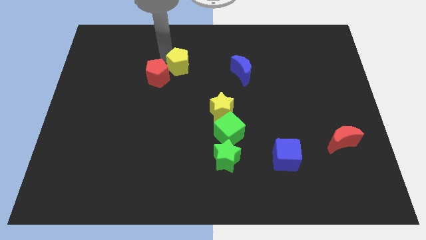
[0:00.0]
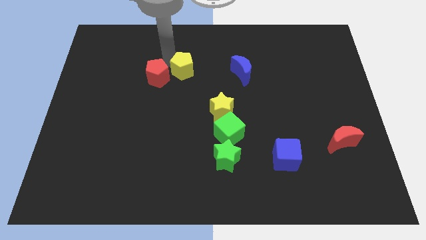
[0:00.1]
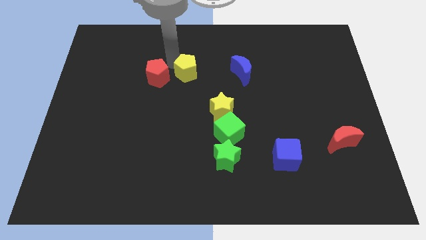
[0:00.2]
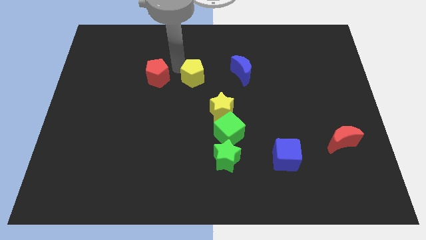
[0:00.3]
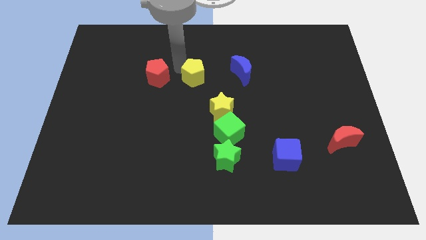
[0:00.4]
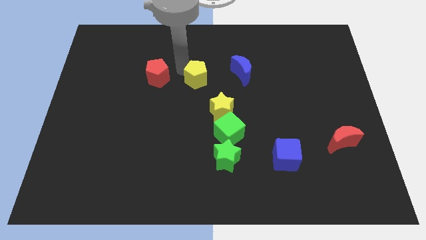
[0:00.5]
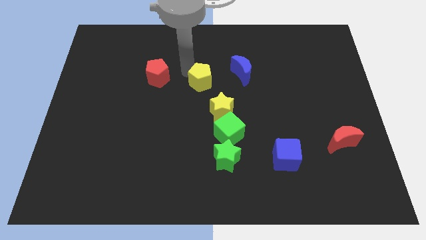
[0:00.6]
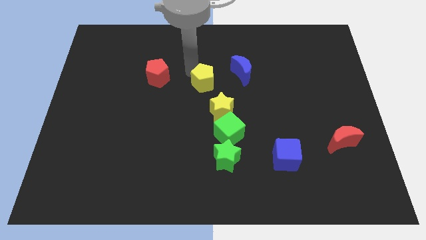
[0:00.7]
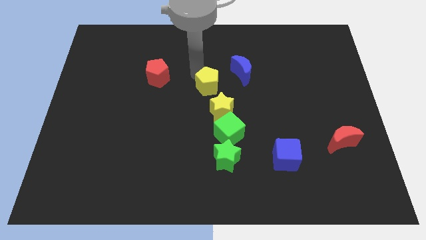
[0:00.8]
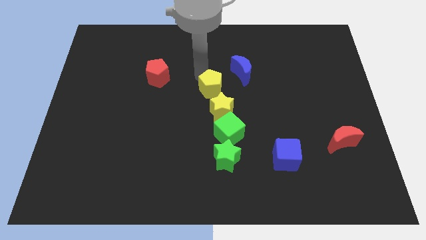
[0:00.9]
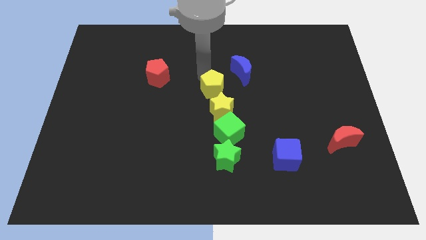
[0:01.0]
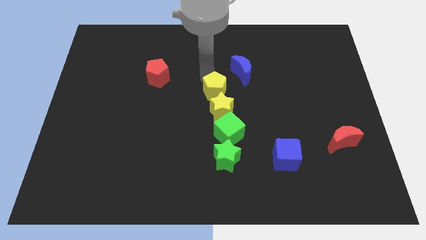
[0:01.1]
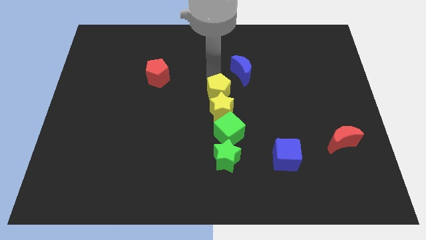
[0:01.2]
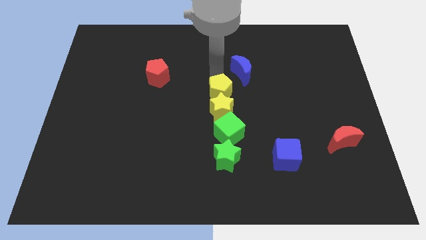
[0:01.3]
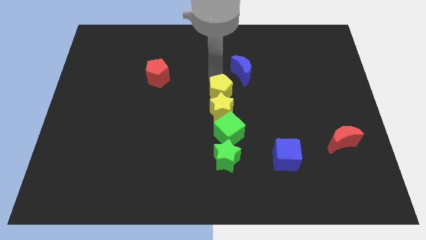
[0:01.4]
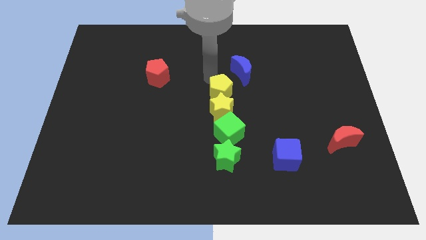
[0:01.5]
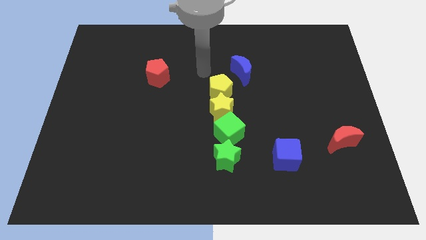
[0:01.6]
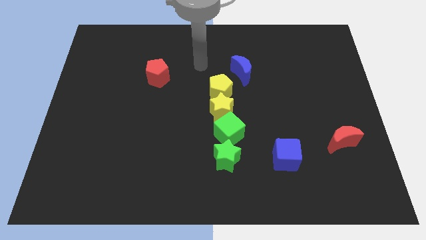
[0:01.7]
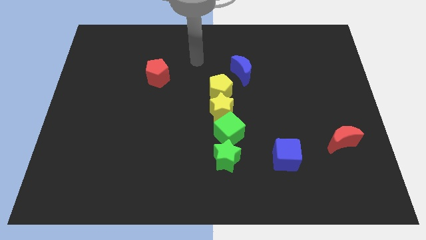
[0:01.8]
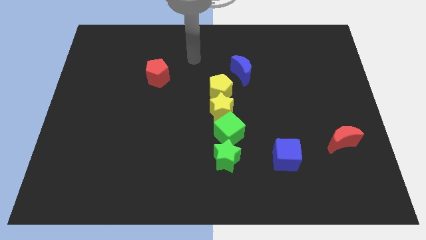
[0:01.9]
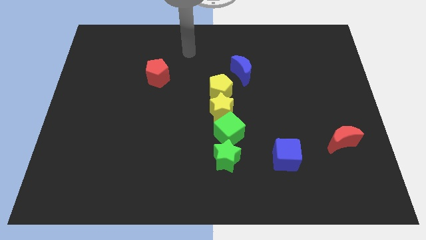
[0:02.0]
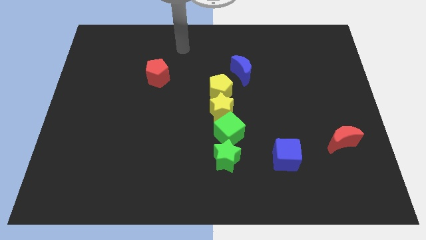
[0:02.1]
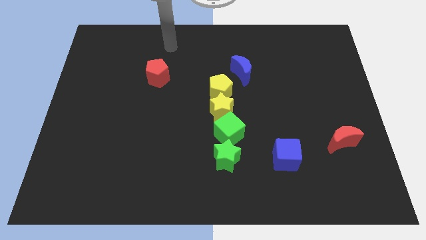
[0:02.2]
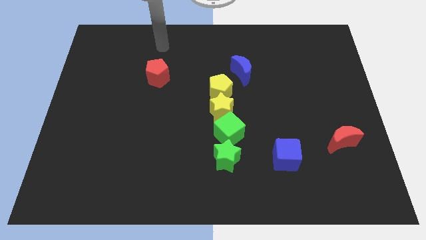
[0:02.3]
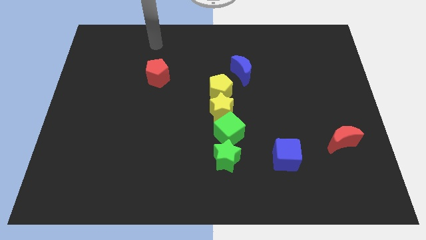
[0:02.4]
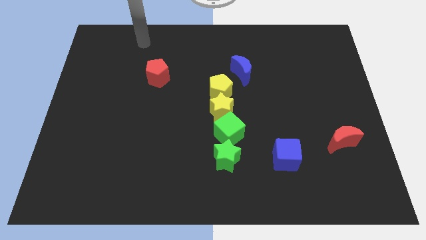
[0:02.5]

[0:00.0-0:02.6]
place the yellow pentagon towards the yellow star

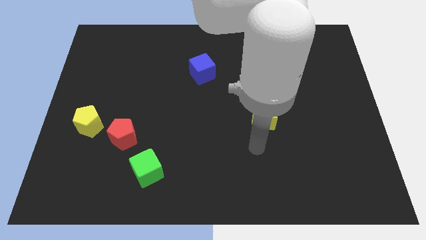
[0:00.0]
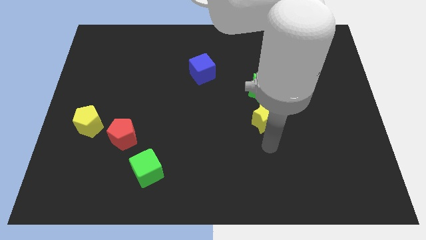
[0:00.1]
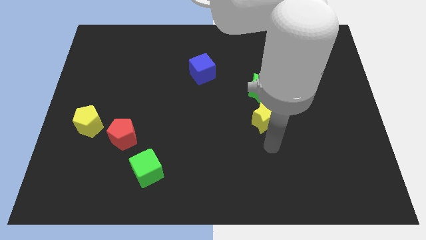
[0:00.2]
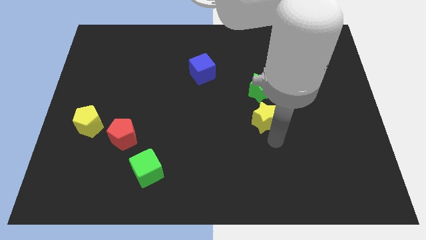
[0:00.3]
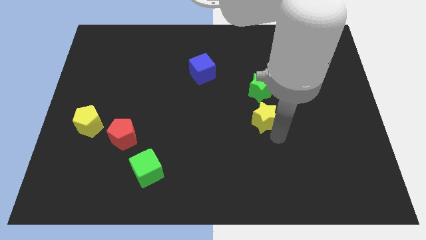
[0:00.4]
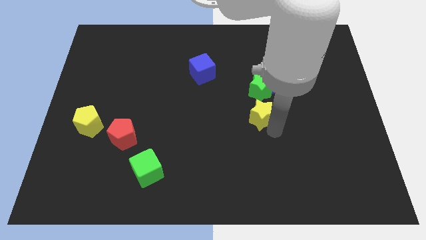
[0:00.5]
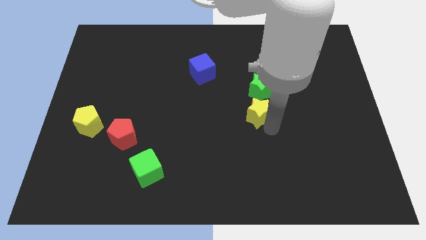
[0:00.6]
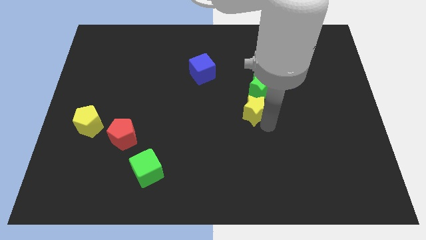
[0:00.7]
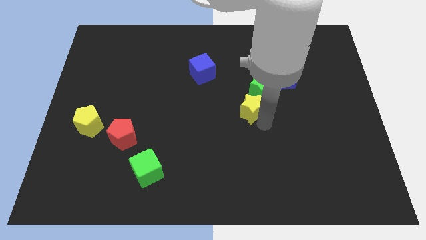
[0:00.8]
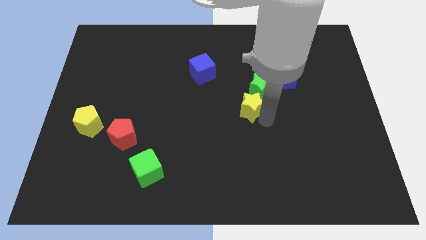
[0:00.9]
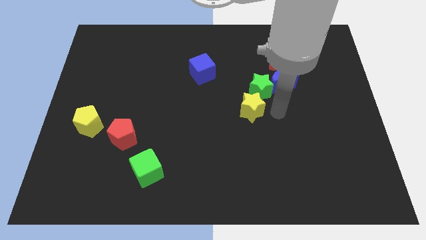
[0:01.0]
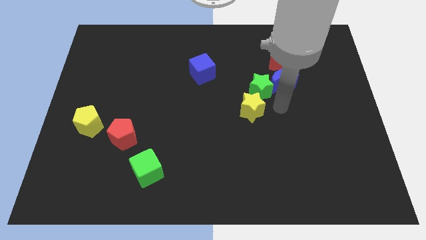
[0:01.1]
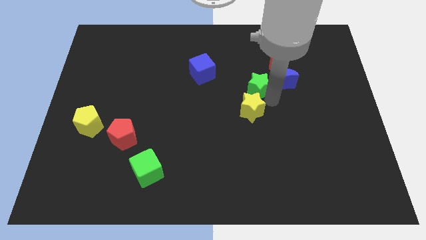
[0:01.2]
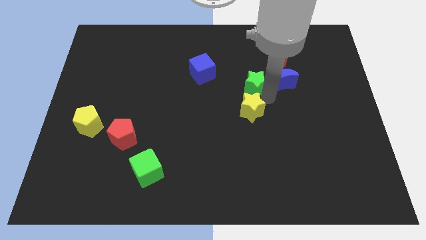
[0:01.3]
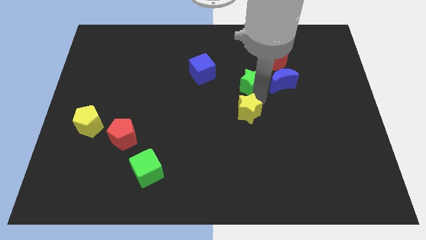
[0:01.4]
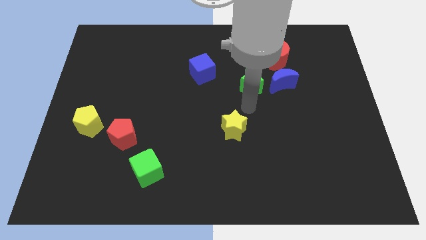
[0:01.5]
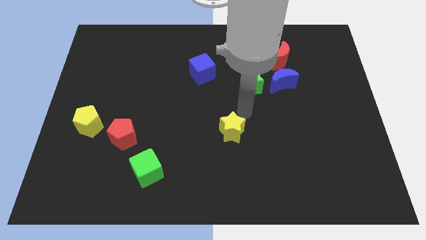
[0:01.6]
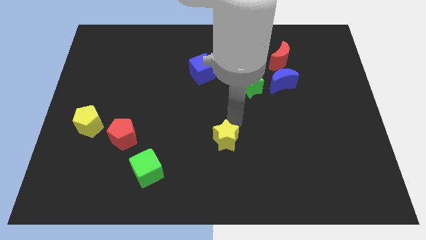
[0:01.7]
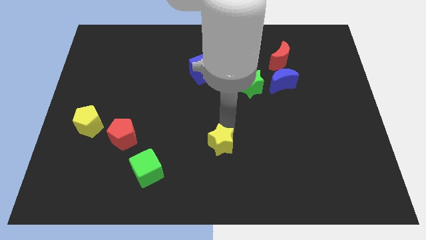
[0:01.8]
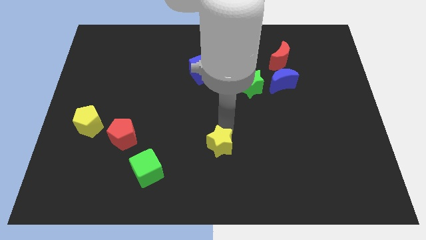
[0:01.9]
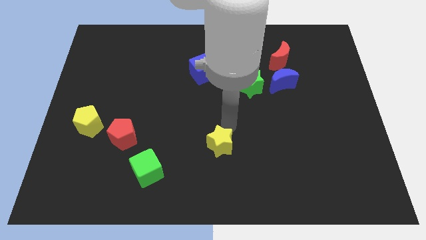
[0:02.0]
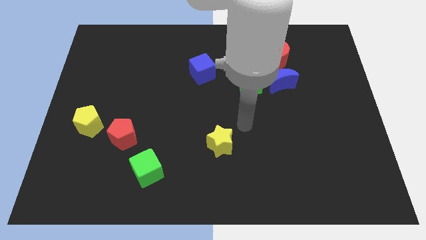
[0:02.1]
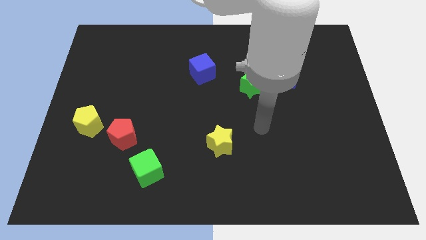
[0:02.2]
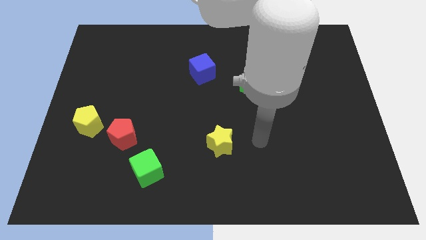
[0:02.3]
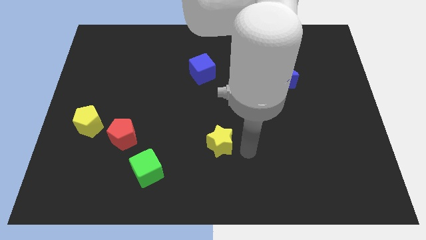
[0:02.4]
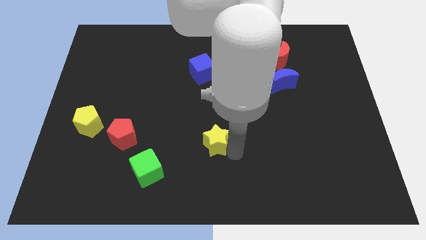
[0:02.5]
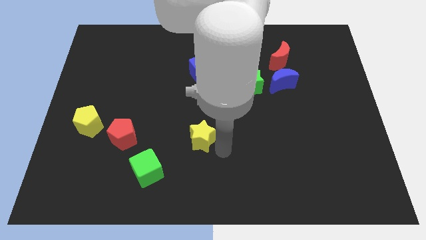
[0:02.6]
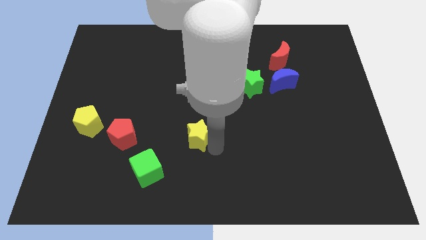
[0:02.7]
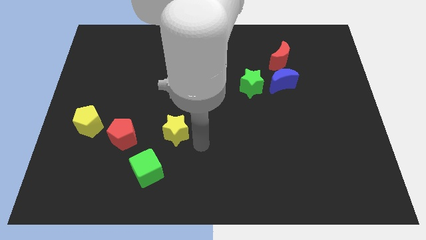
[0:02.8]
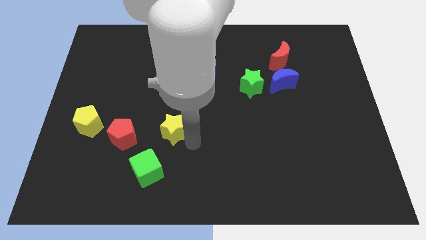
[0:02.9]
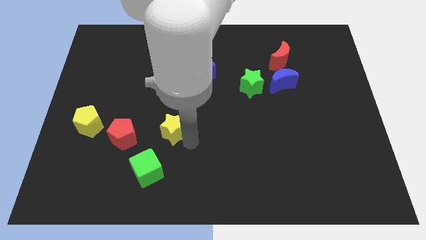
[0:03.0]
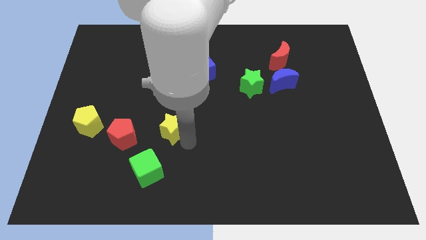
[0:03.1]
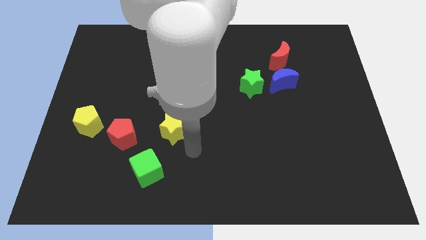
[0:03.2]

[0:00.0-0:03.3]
push the yellow star to the parallel right of red pentagon

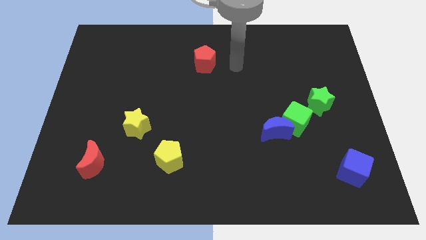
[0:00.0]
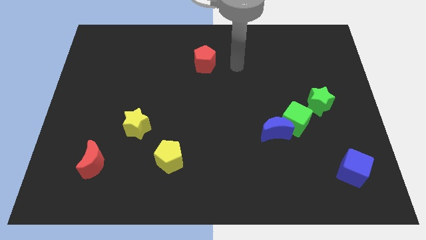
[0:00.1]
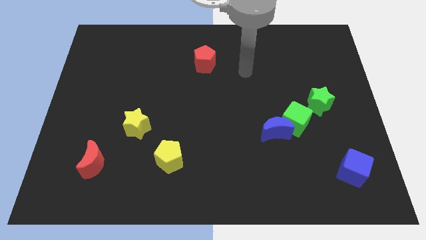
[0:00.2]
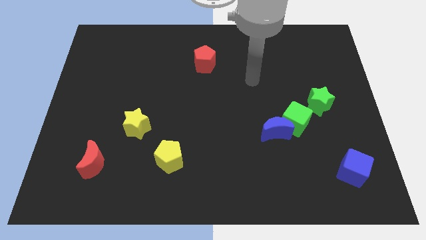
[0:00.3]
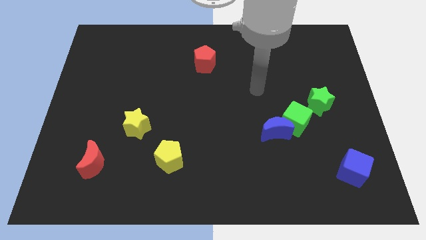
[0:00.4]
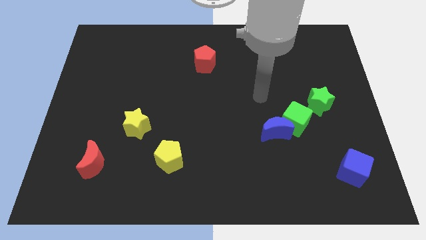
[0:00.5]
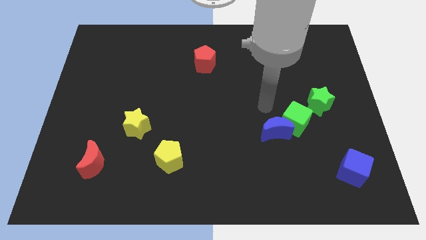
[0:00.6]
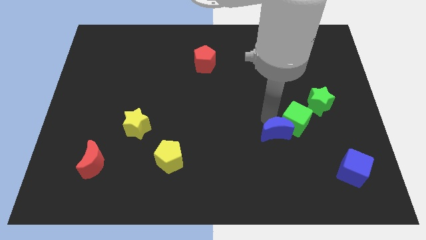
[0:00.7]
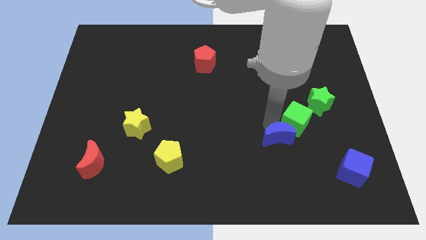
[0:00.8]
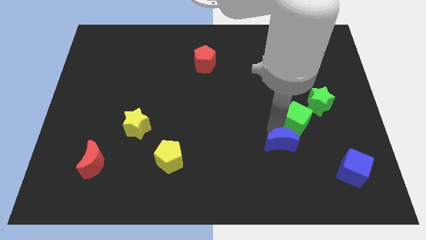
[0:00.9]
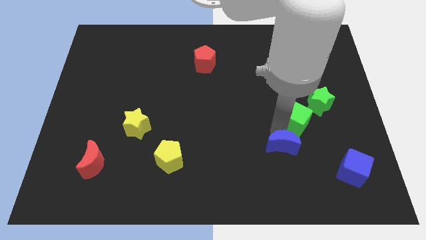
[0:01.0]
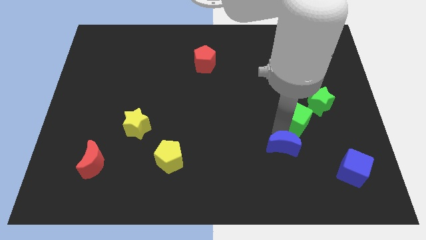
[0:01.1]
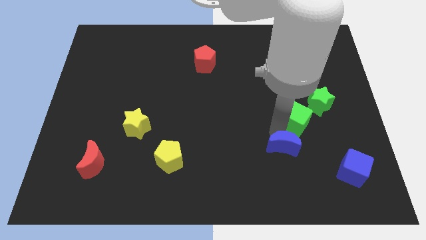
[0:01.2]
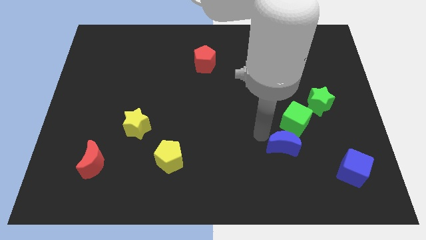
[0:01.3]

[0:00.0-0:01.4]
place the blue crescent below the green cube

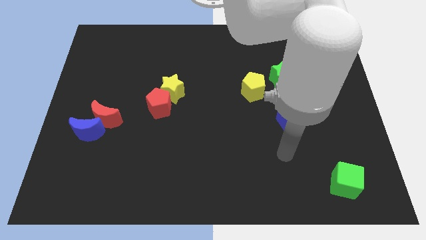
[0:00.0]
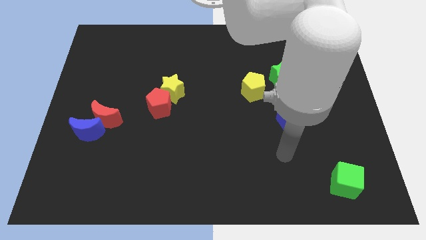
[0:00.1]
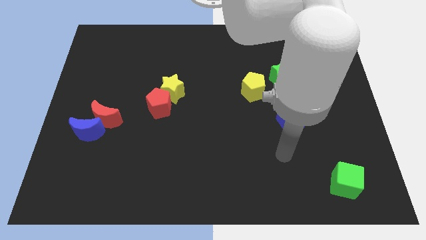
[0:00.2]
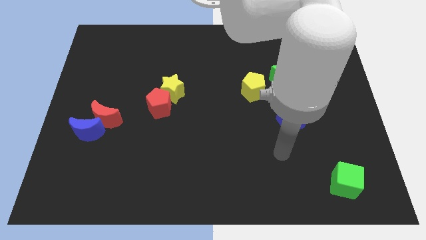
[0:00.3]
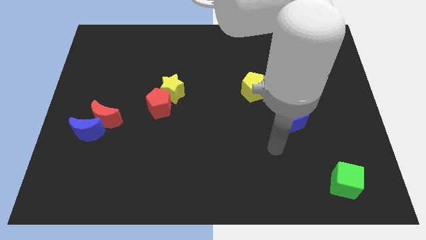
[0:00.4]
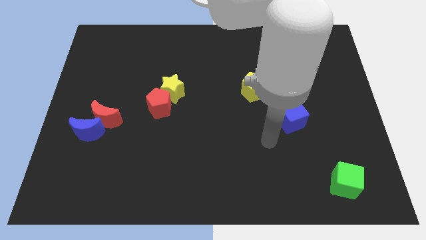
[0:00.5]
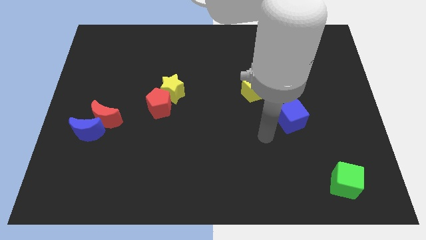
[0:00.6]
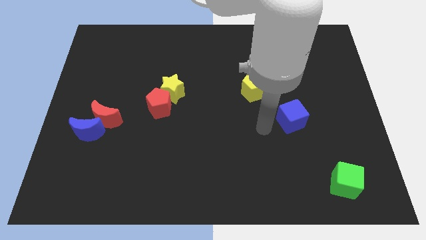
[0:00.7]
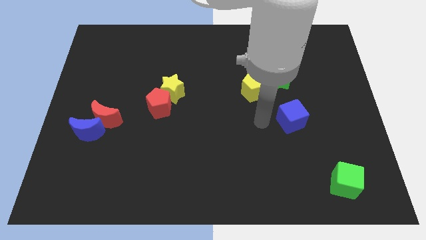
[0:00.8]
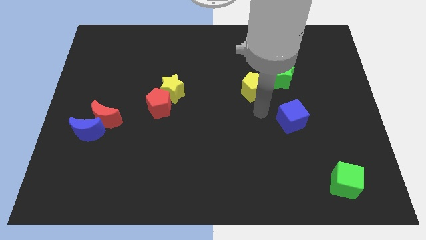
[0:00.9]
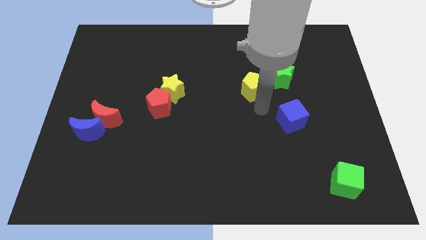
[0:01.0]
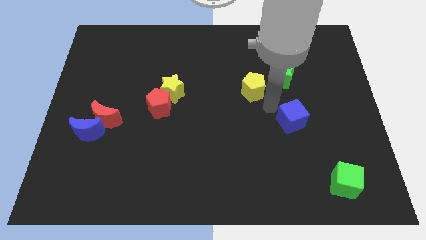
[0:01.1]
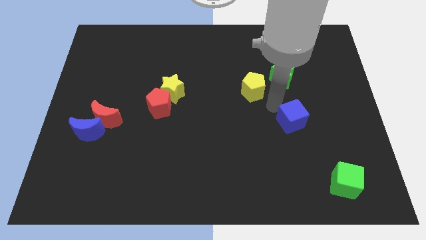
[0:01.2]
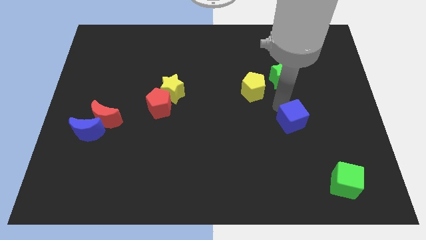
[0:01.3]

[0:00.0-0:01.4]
move your arm above the blue cube
